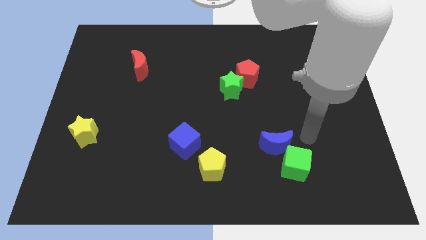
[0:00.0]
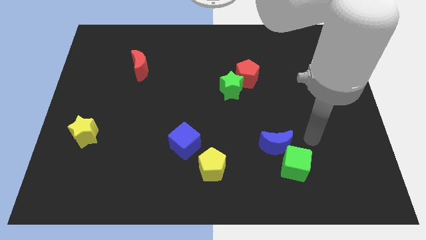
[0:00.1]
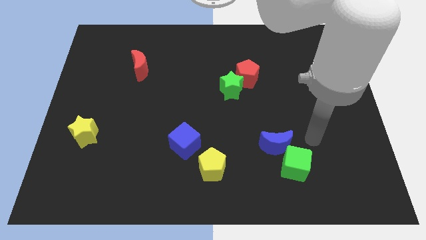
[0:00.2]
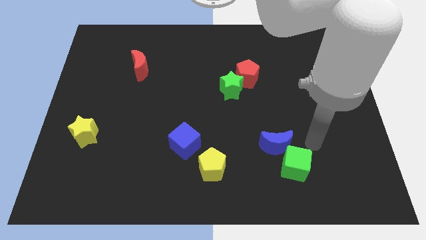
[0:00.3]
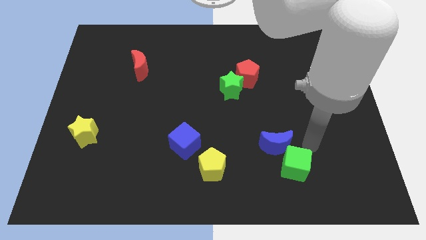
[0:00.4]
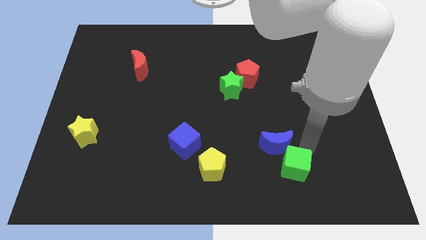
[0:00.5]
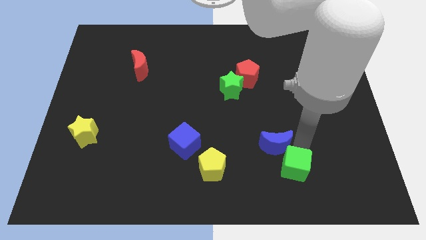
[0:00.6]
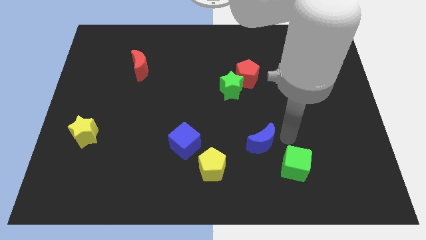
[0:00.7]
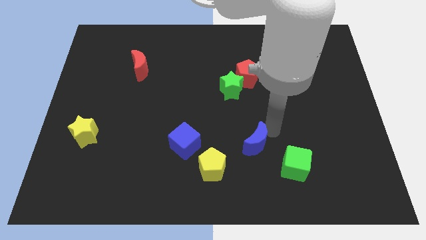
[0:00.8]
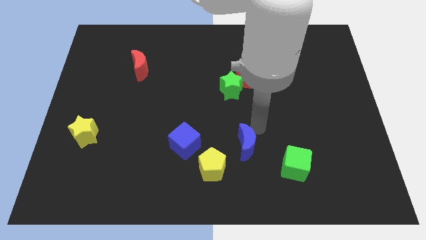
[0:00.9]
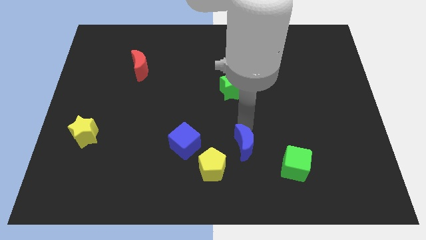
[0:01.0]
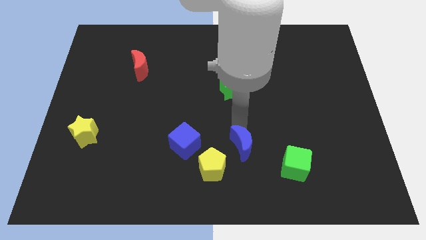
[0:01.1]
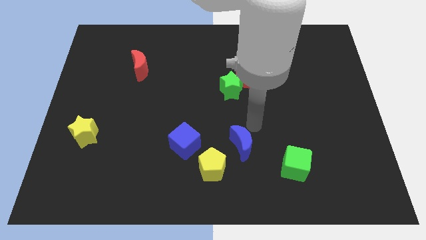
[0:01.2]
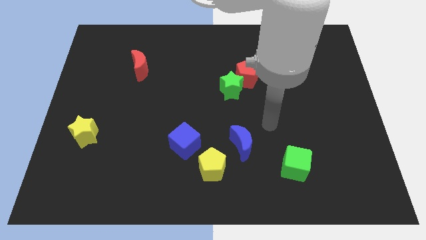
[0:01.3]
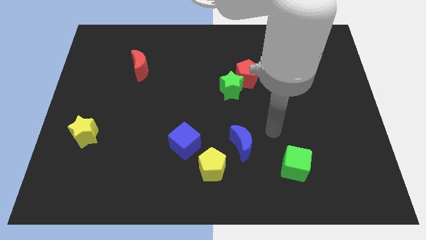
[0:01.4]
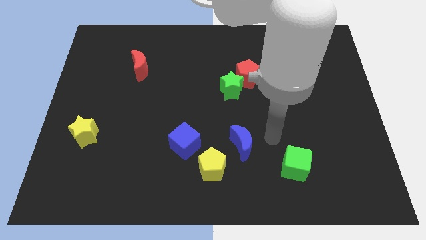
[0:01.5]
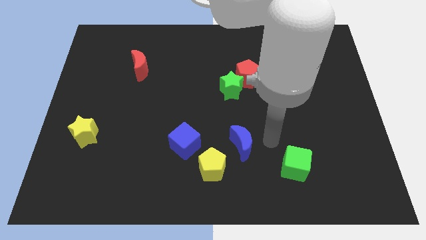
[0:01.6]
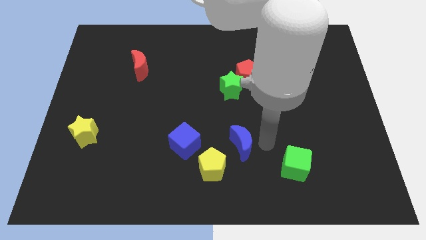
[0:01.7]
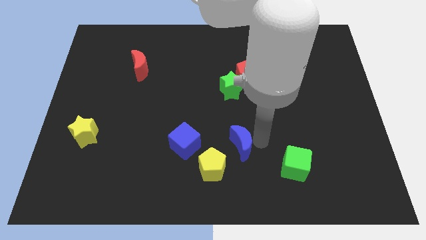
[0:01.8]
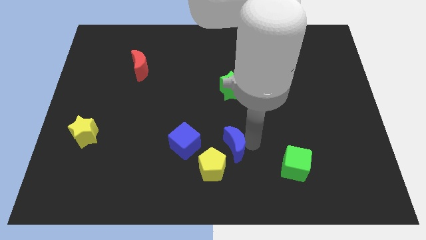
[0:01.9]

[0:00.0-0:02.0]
turn the blue crescent diagonal right of yellow pentagon

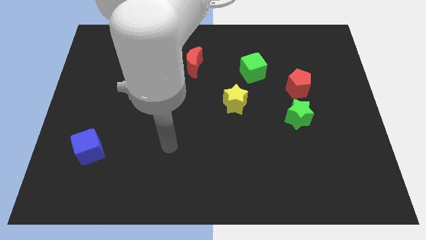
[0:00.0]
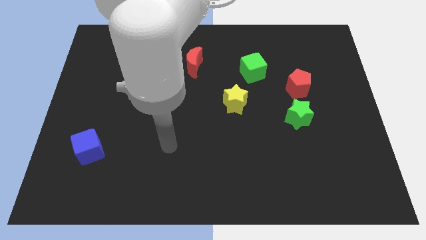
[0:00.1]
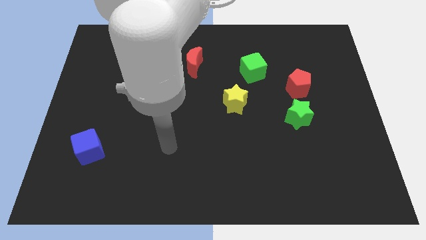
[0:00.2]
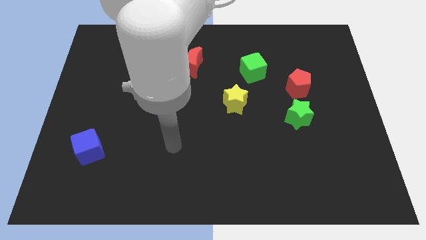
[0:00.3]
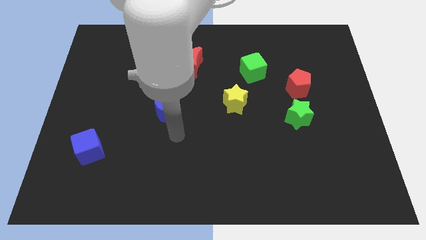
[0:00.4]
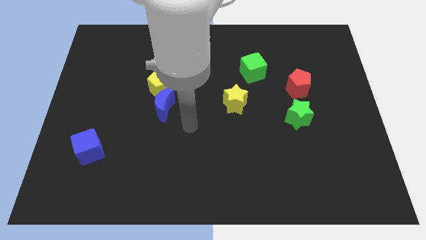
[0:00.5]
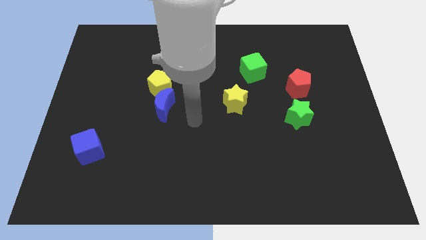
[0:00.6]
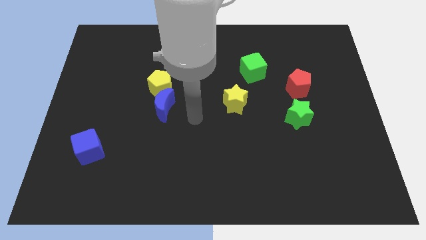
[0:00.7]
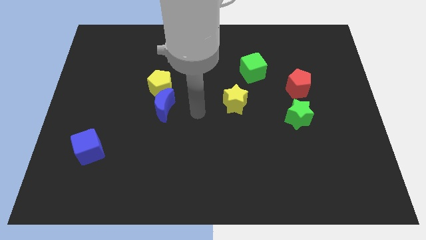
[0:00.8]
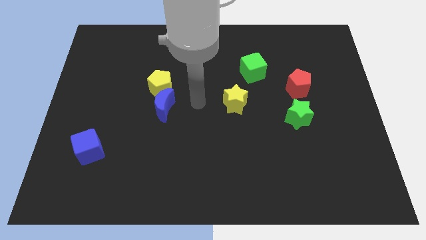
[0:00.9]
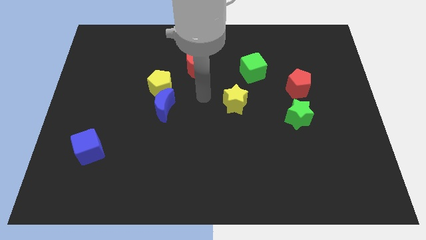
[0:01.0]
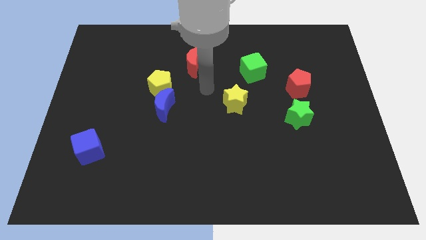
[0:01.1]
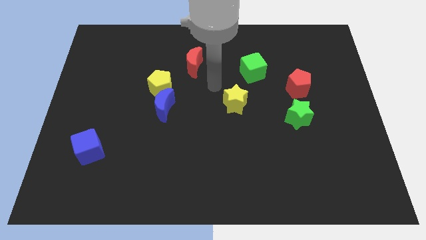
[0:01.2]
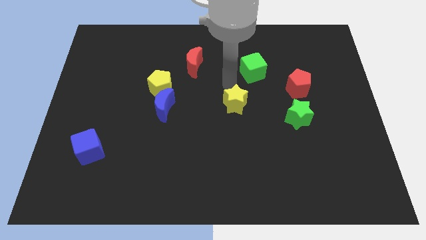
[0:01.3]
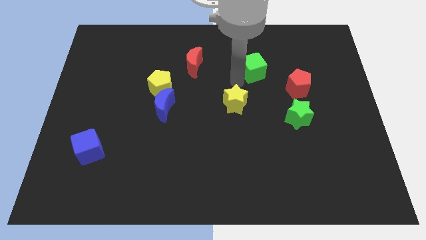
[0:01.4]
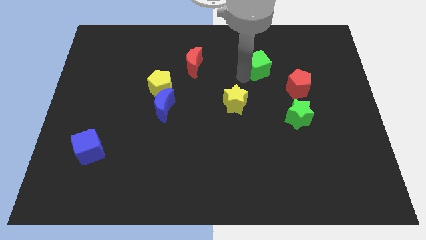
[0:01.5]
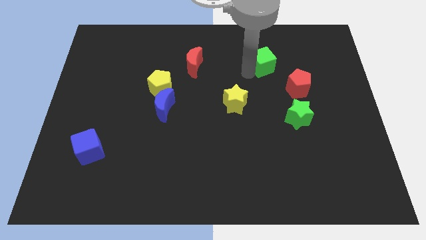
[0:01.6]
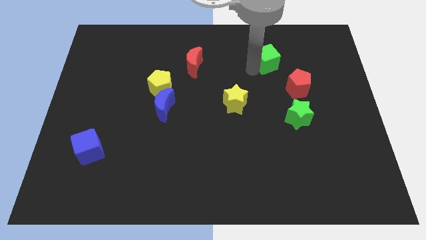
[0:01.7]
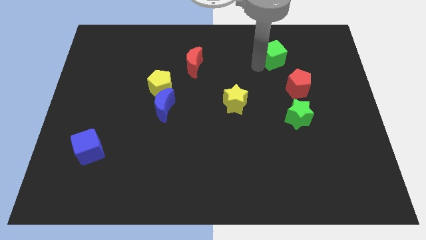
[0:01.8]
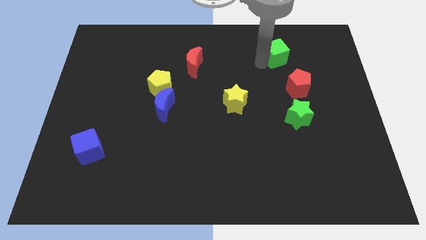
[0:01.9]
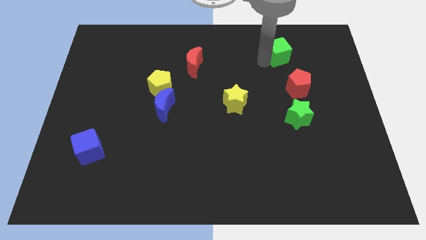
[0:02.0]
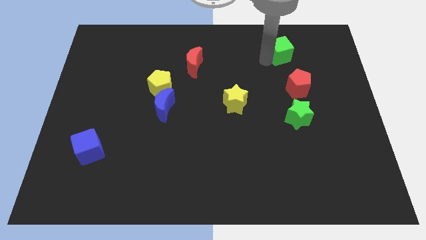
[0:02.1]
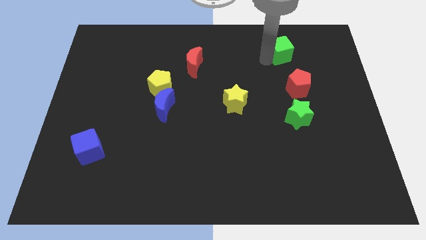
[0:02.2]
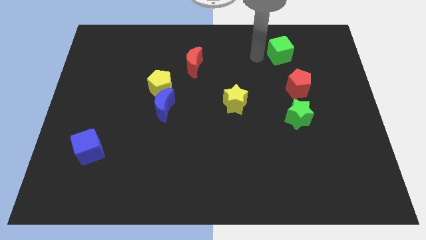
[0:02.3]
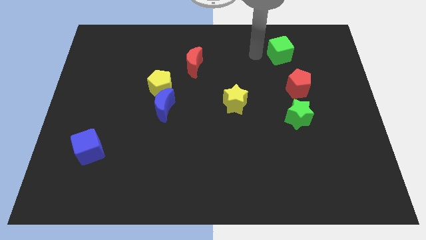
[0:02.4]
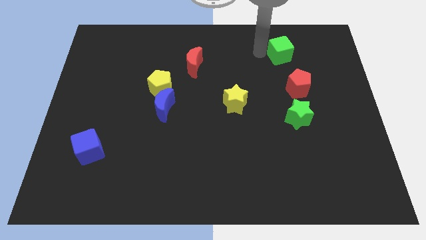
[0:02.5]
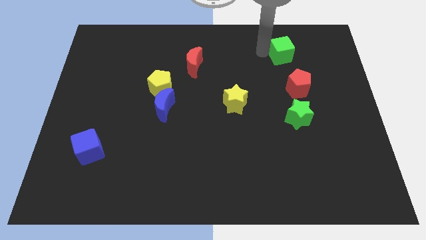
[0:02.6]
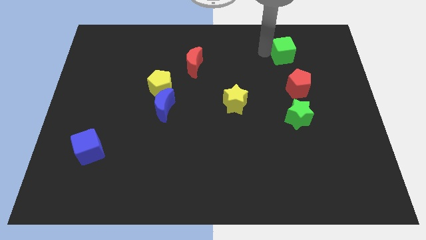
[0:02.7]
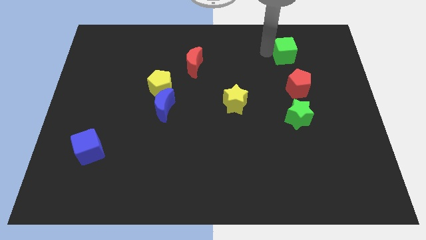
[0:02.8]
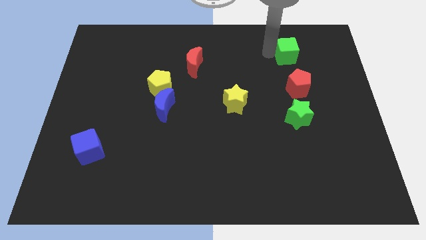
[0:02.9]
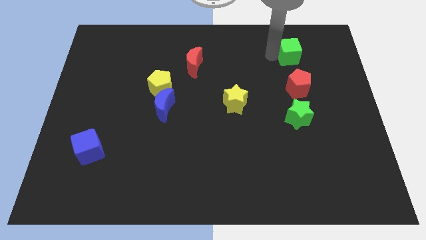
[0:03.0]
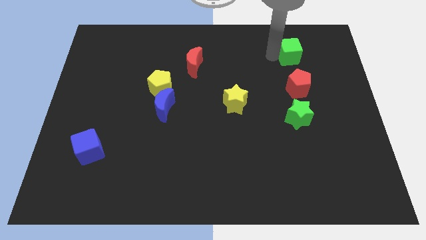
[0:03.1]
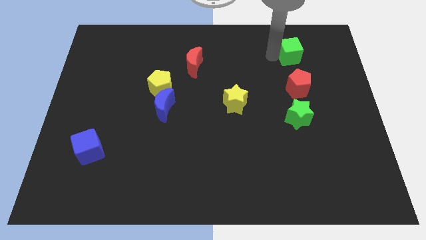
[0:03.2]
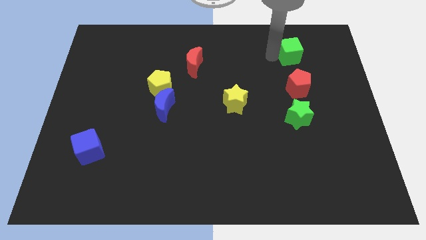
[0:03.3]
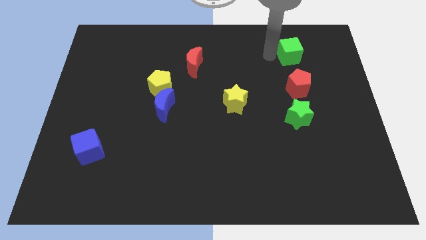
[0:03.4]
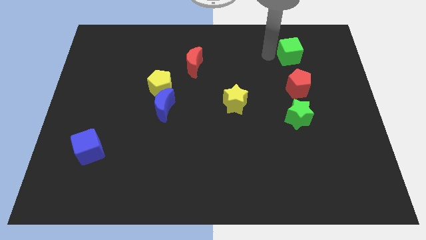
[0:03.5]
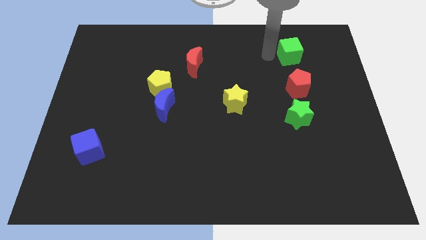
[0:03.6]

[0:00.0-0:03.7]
place the green cube diagonal to the blue crescent

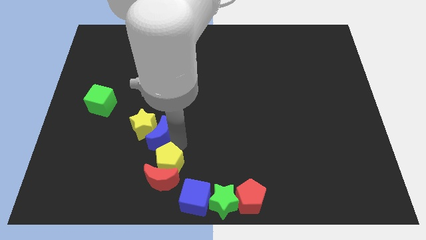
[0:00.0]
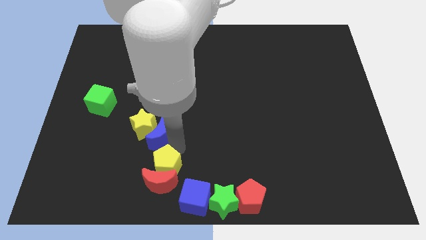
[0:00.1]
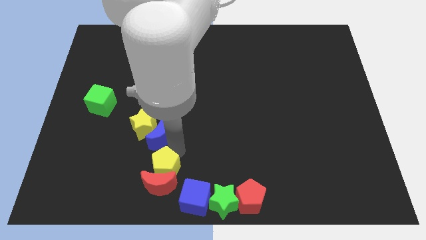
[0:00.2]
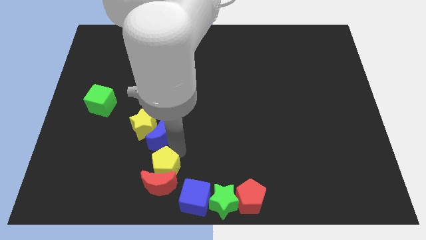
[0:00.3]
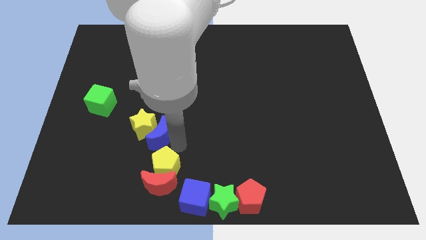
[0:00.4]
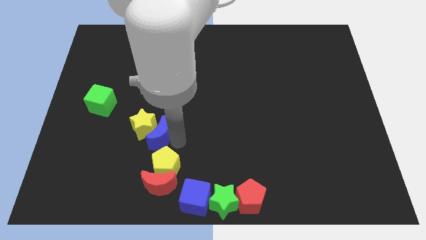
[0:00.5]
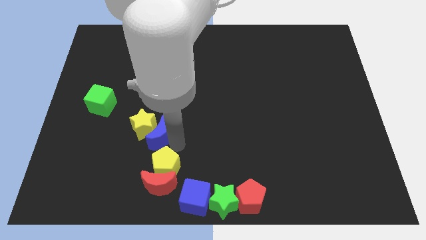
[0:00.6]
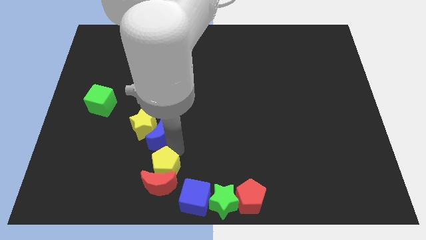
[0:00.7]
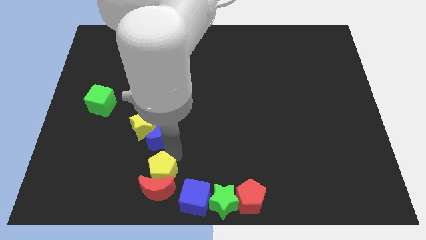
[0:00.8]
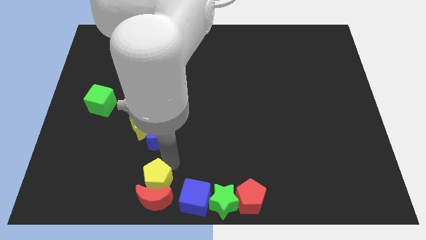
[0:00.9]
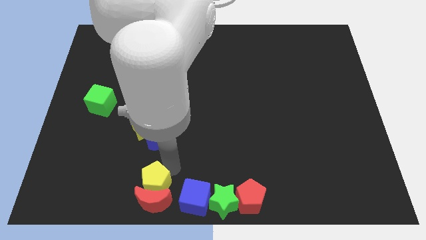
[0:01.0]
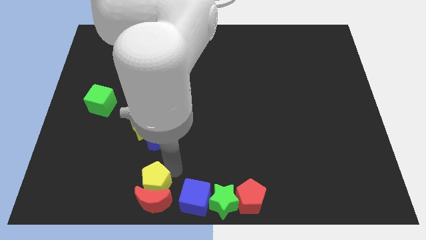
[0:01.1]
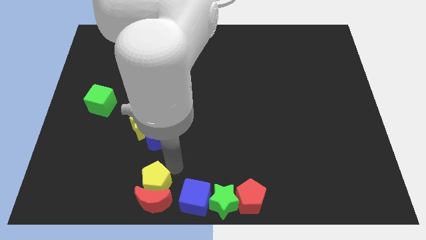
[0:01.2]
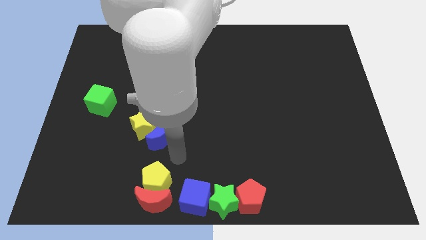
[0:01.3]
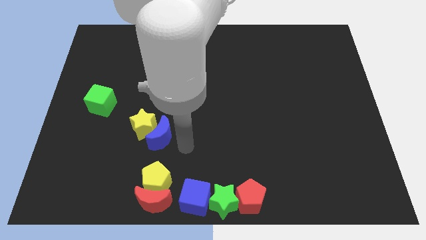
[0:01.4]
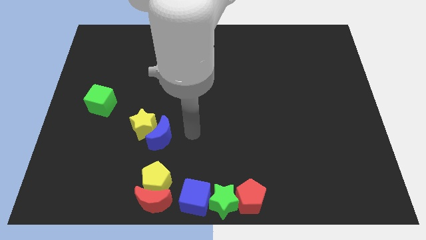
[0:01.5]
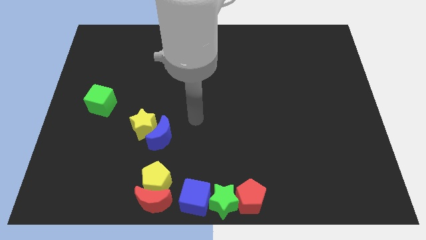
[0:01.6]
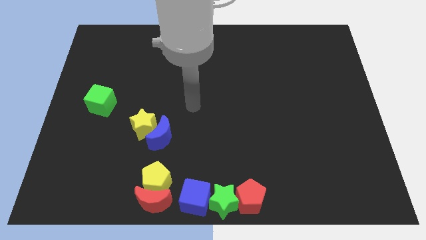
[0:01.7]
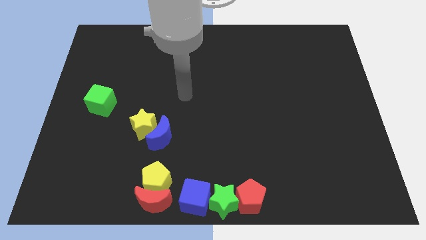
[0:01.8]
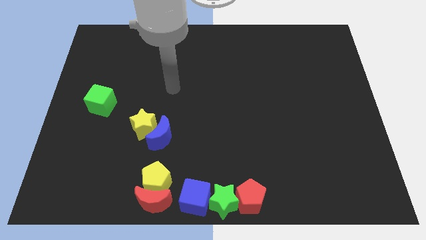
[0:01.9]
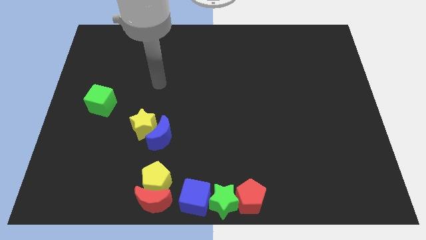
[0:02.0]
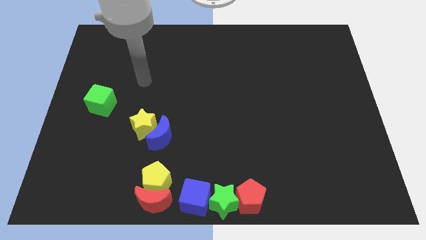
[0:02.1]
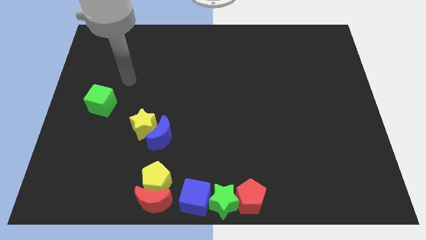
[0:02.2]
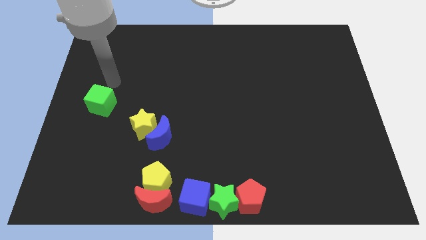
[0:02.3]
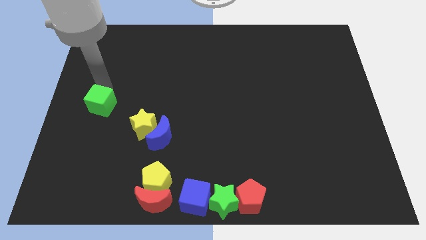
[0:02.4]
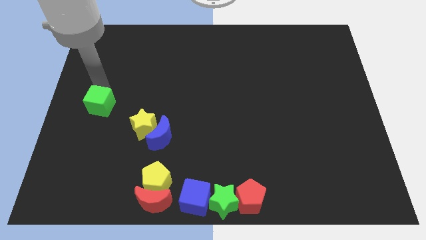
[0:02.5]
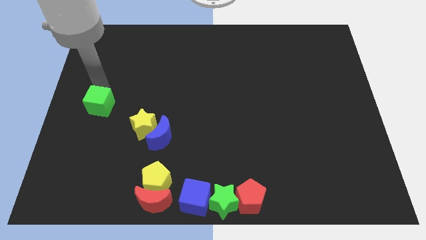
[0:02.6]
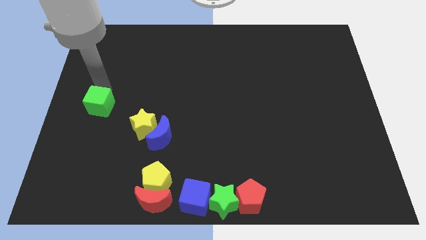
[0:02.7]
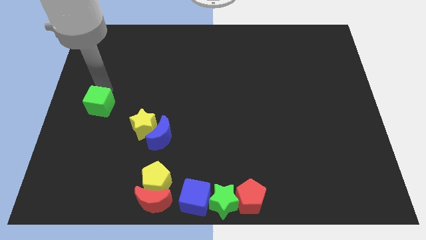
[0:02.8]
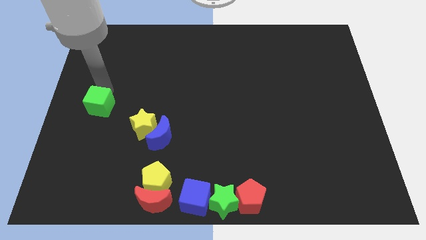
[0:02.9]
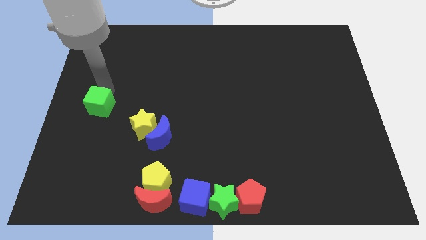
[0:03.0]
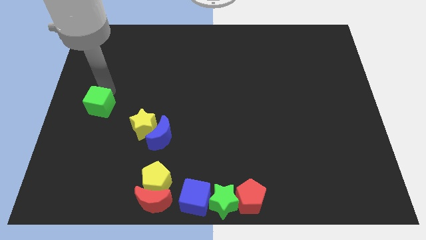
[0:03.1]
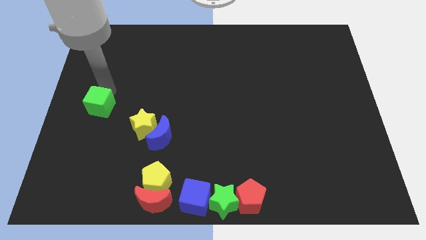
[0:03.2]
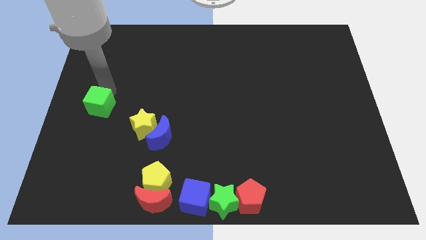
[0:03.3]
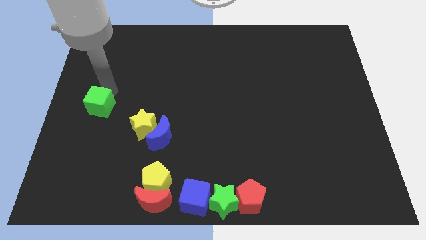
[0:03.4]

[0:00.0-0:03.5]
push the yellow pentagon into the red crescent
